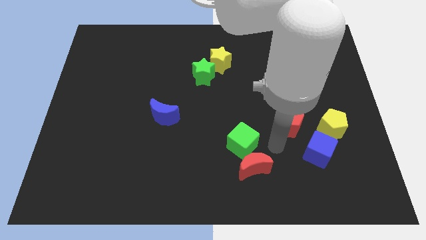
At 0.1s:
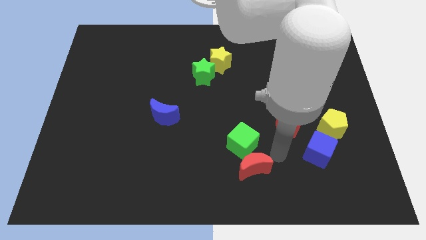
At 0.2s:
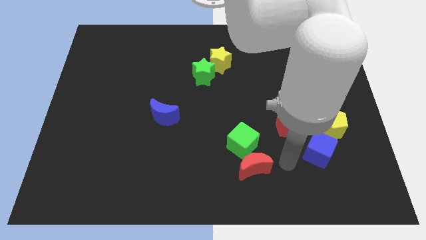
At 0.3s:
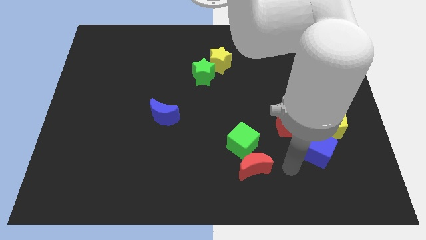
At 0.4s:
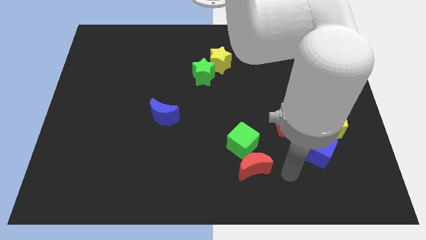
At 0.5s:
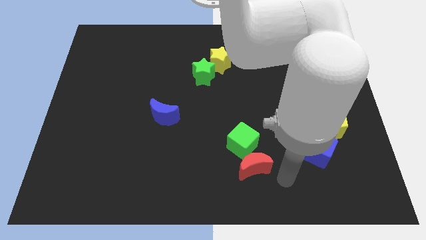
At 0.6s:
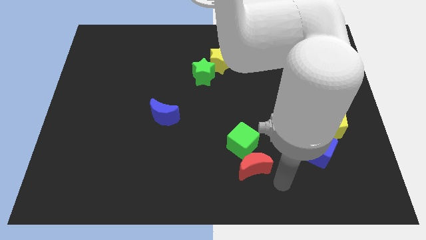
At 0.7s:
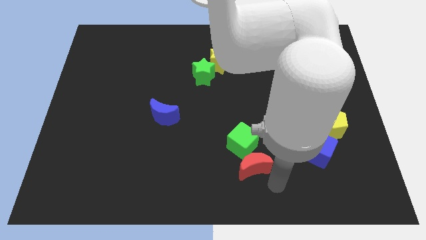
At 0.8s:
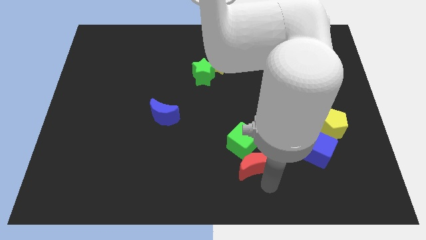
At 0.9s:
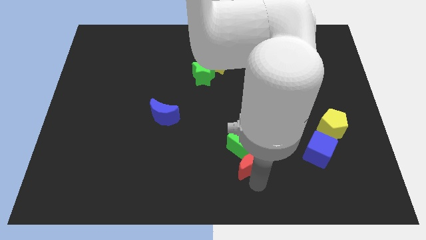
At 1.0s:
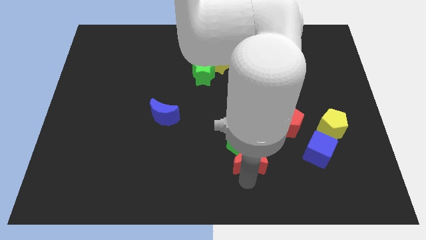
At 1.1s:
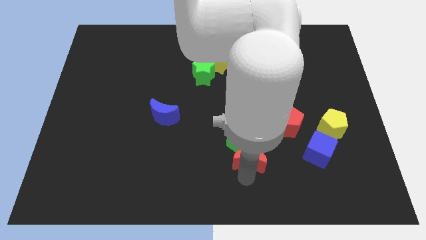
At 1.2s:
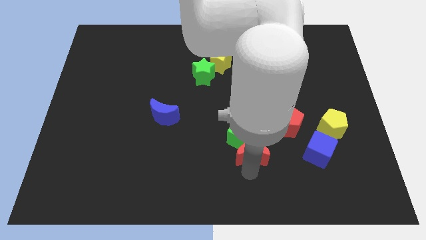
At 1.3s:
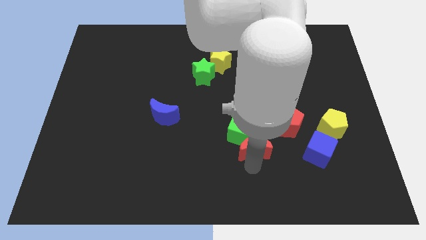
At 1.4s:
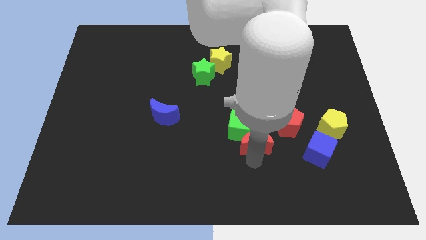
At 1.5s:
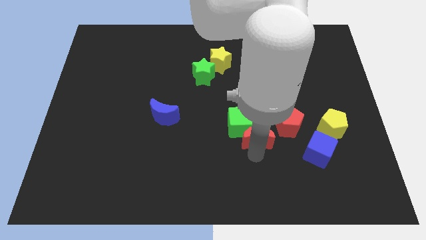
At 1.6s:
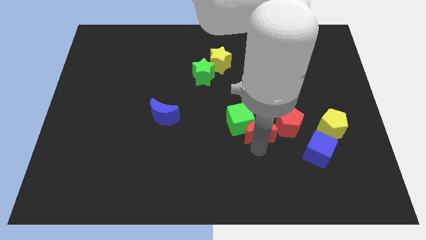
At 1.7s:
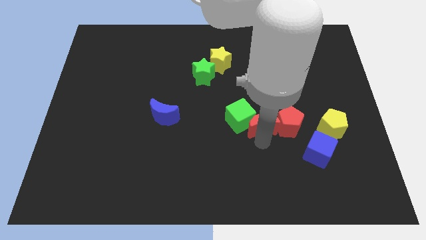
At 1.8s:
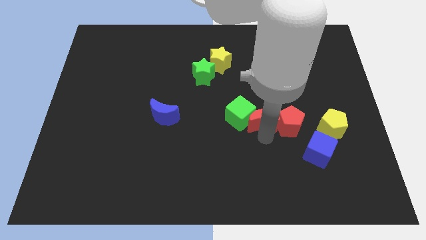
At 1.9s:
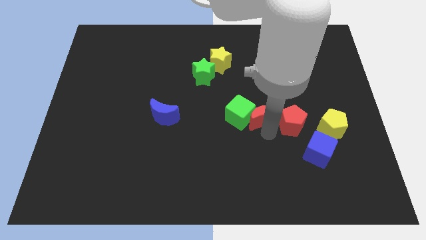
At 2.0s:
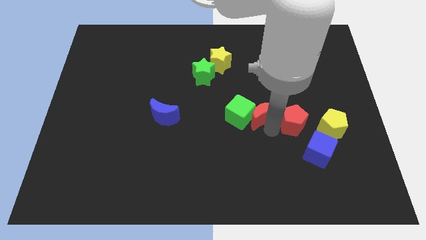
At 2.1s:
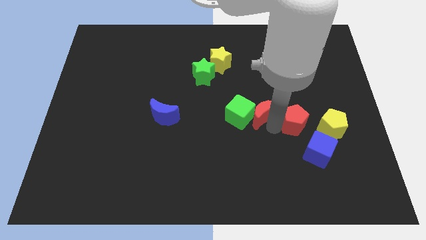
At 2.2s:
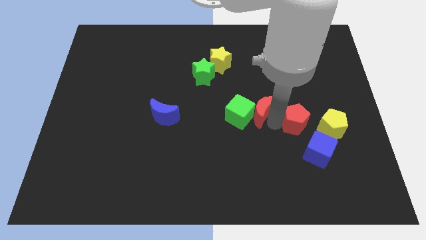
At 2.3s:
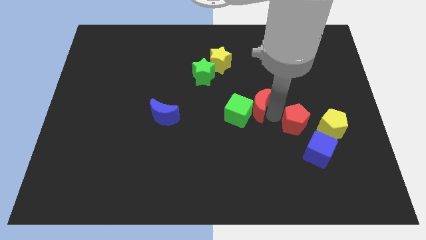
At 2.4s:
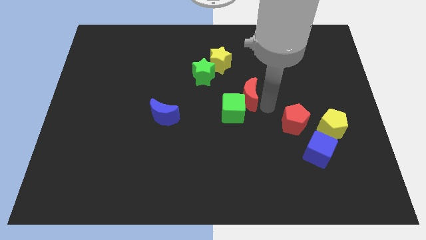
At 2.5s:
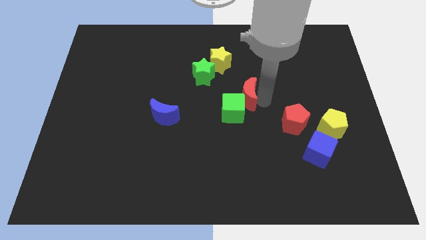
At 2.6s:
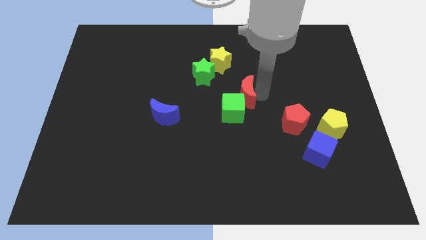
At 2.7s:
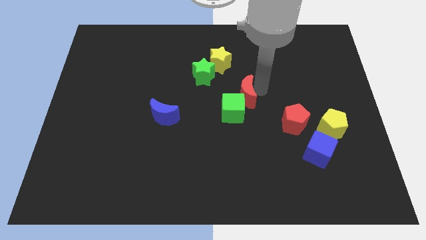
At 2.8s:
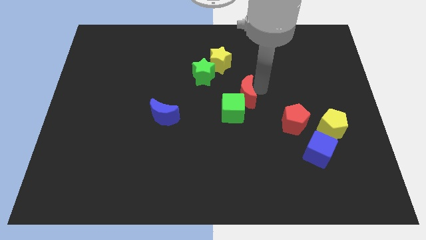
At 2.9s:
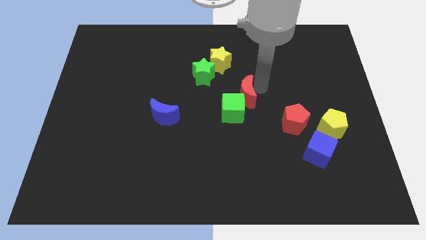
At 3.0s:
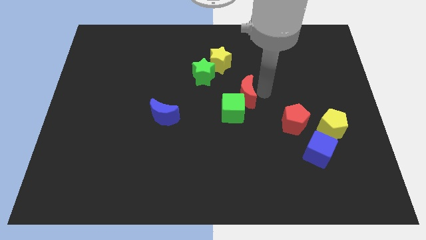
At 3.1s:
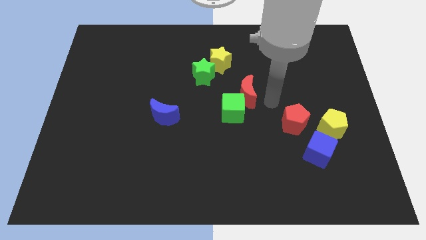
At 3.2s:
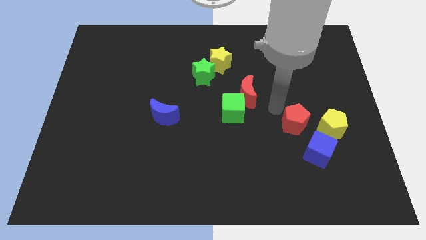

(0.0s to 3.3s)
move the red crescent to the top right of the green cube

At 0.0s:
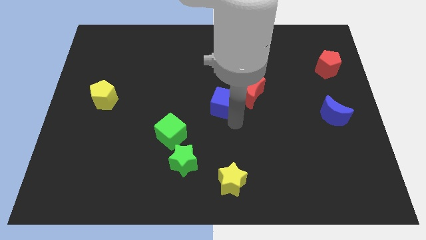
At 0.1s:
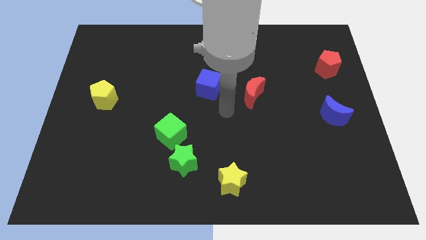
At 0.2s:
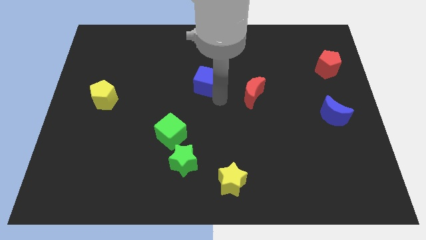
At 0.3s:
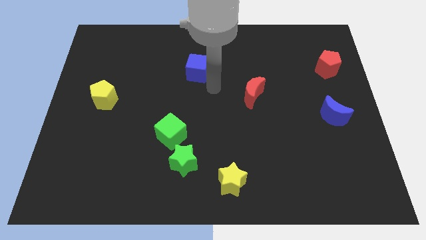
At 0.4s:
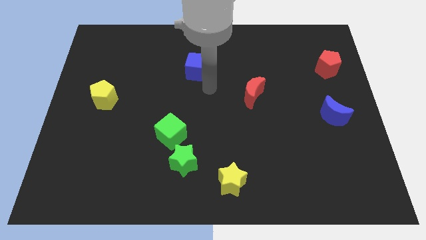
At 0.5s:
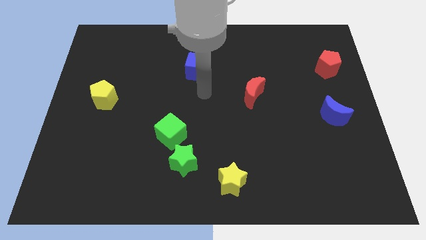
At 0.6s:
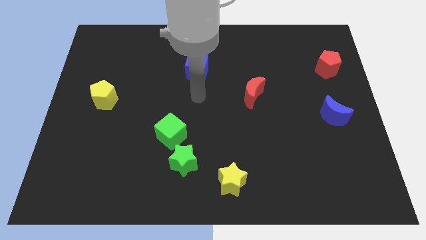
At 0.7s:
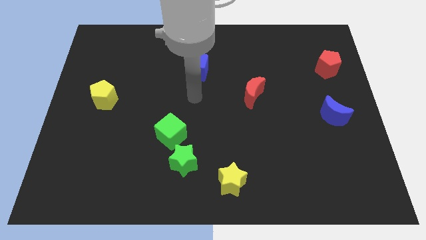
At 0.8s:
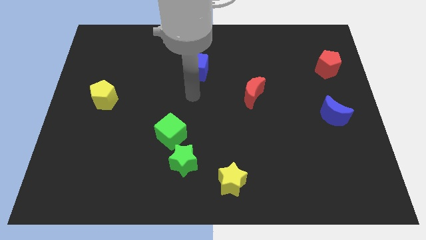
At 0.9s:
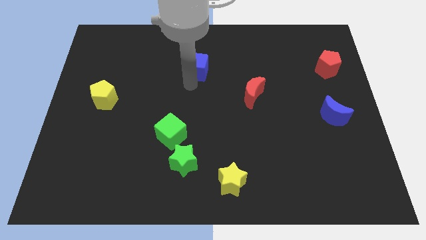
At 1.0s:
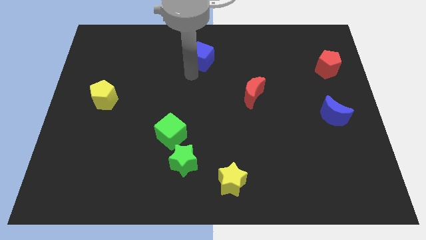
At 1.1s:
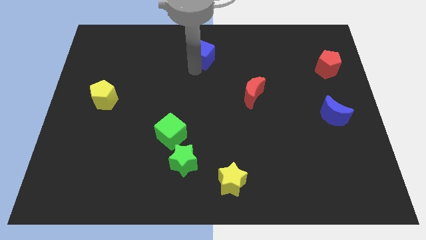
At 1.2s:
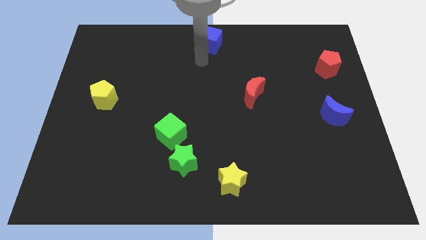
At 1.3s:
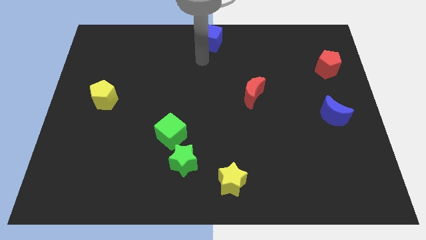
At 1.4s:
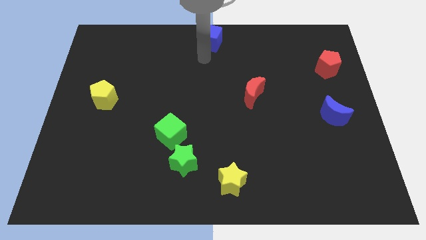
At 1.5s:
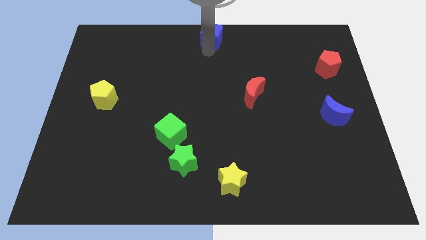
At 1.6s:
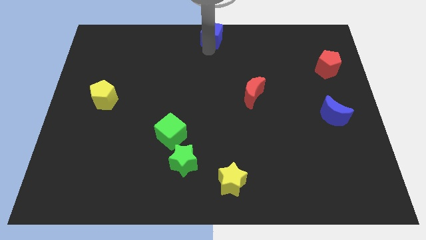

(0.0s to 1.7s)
slide the blue cube diagonally top left to the red moon

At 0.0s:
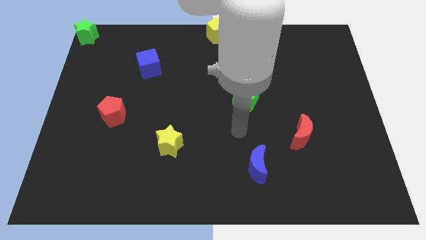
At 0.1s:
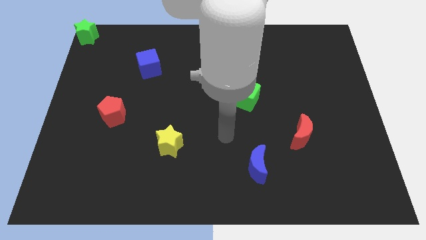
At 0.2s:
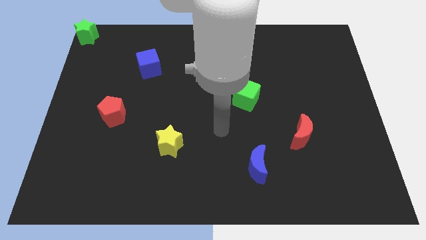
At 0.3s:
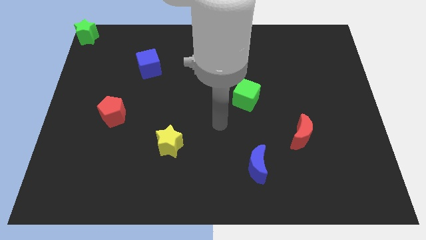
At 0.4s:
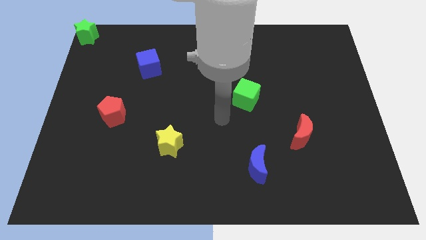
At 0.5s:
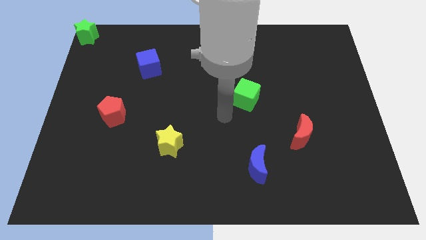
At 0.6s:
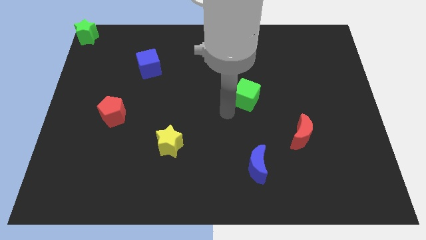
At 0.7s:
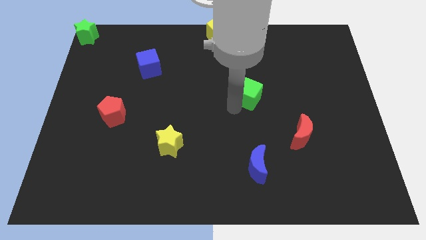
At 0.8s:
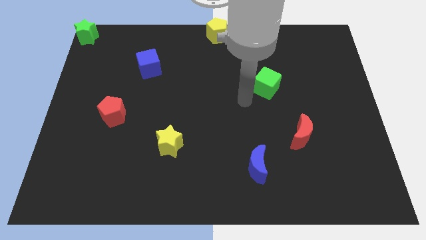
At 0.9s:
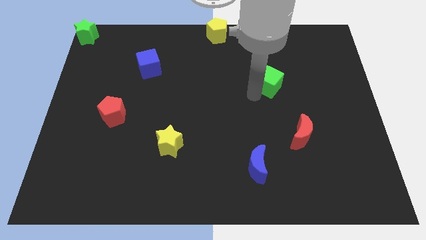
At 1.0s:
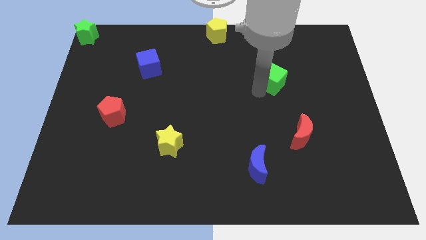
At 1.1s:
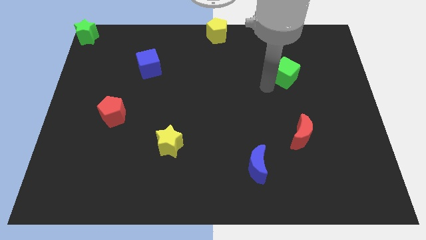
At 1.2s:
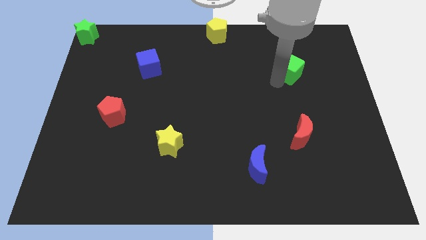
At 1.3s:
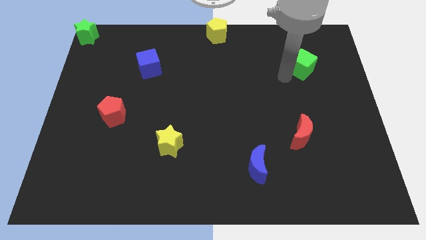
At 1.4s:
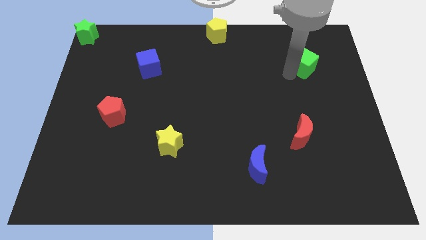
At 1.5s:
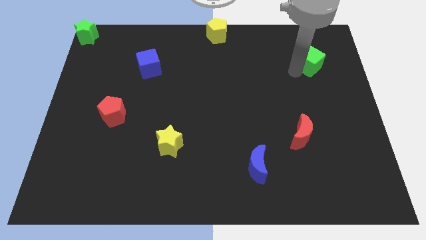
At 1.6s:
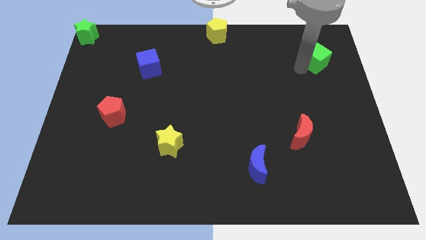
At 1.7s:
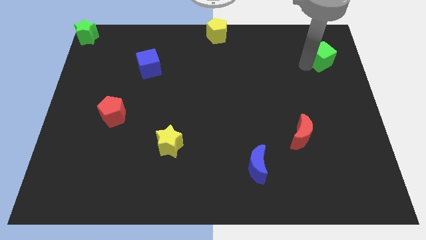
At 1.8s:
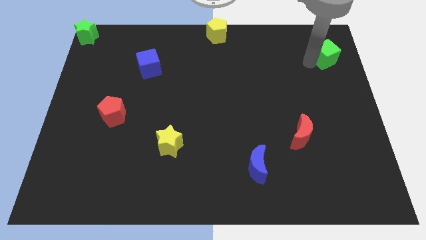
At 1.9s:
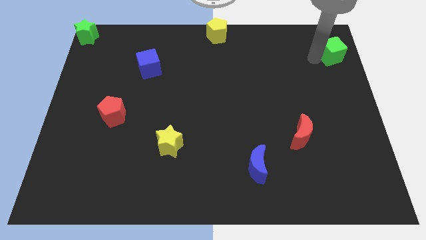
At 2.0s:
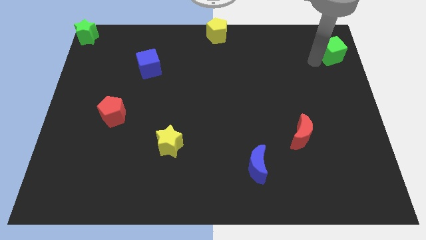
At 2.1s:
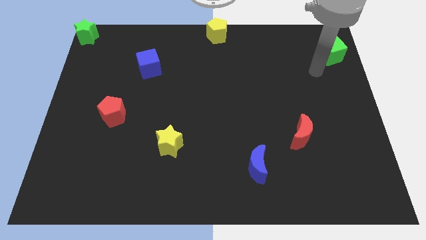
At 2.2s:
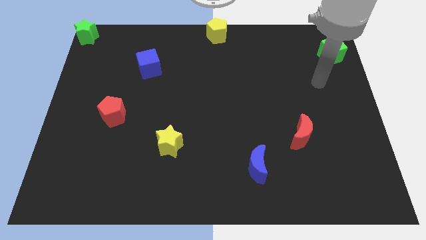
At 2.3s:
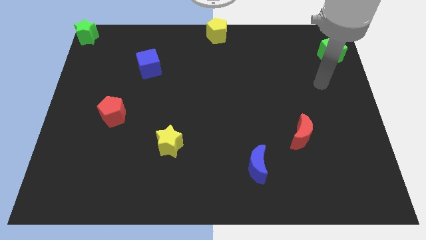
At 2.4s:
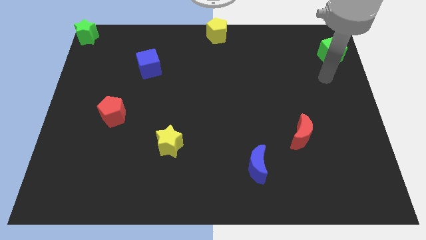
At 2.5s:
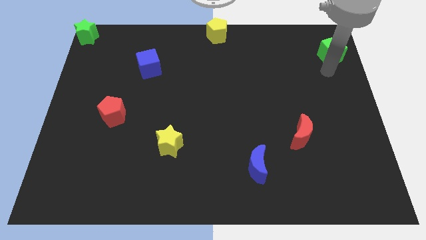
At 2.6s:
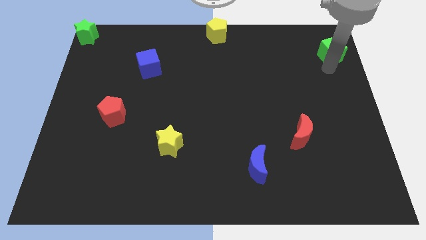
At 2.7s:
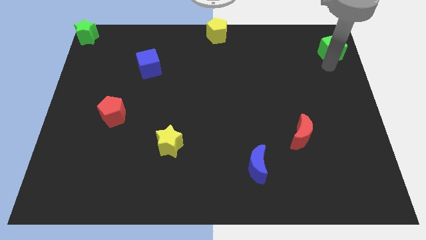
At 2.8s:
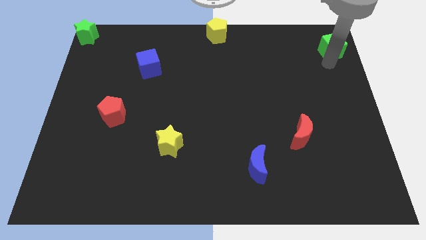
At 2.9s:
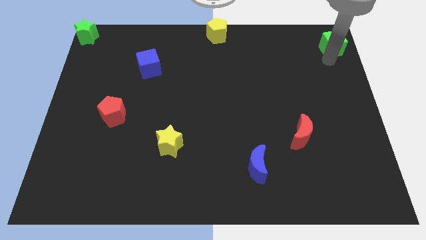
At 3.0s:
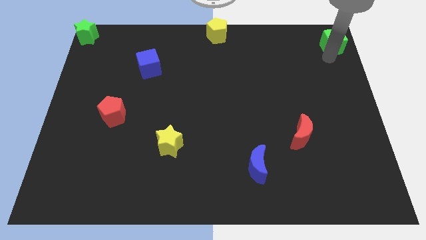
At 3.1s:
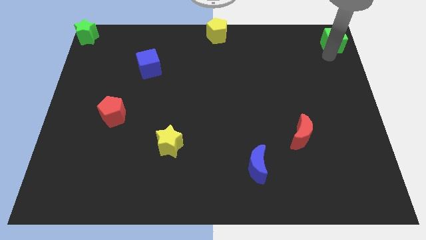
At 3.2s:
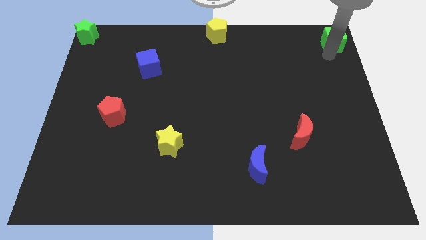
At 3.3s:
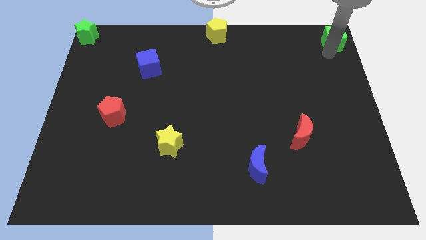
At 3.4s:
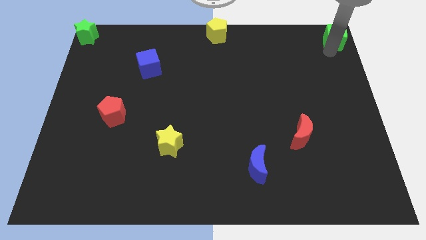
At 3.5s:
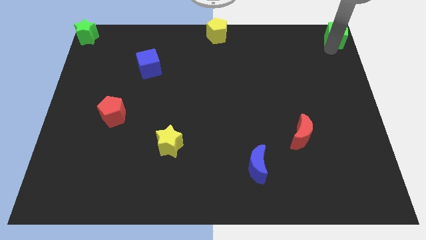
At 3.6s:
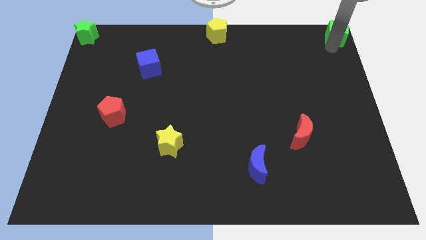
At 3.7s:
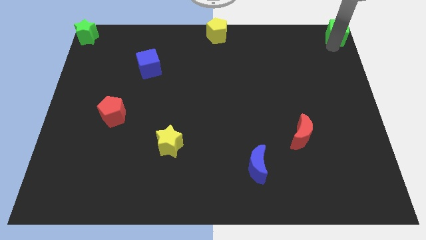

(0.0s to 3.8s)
move the green cube to the top right corner of the board

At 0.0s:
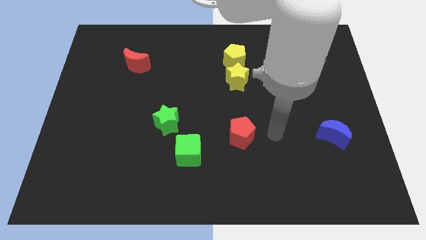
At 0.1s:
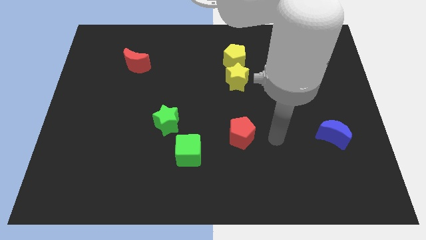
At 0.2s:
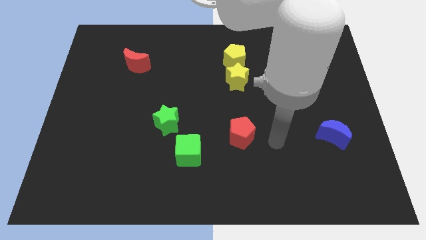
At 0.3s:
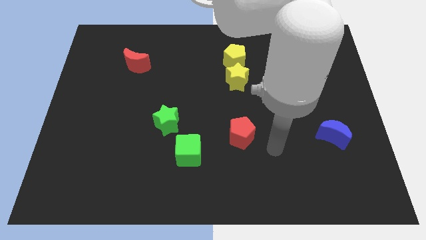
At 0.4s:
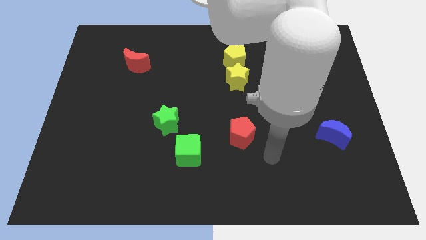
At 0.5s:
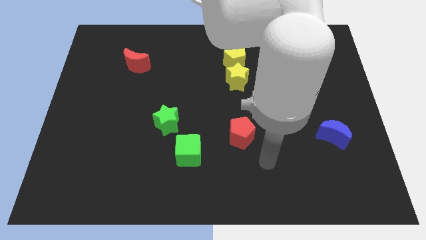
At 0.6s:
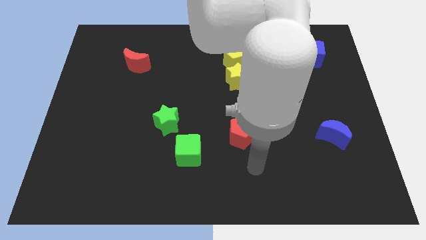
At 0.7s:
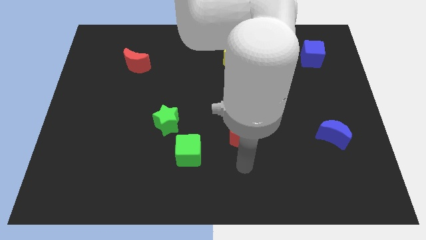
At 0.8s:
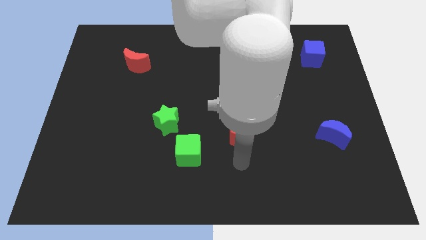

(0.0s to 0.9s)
put arm below red pentagon
